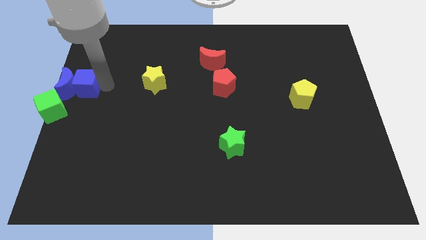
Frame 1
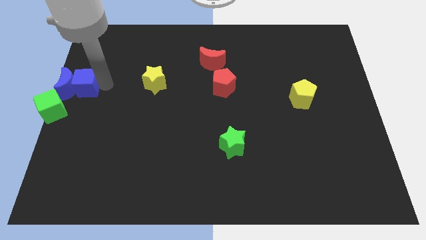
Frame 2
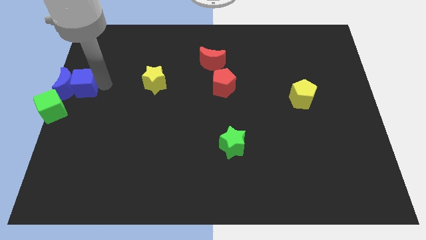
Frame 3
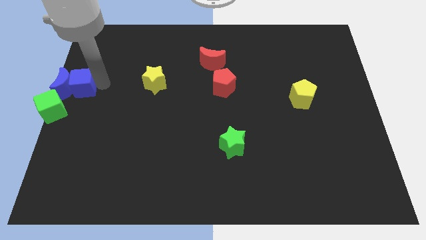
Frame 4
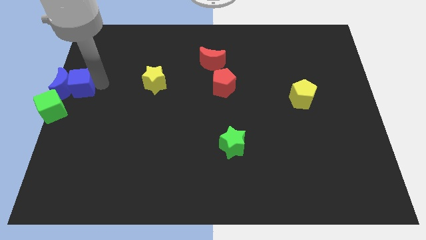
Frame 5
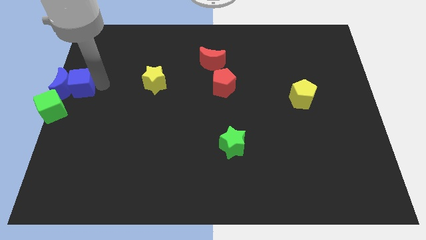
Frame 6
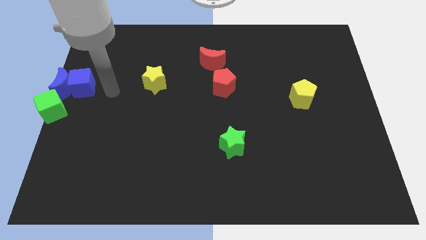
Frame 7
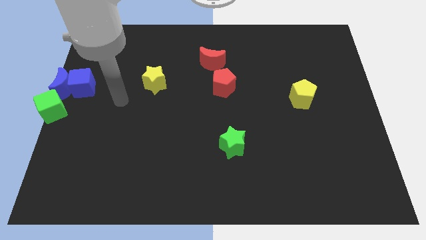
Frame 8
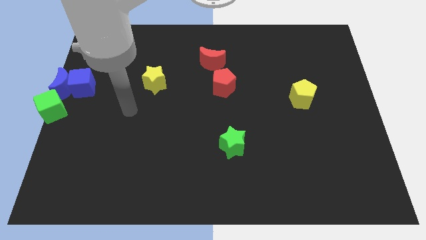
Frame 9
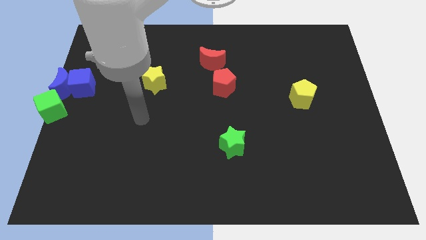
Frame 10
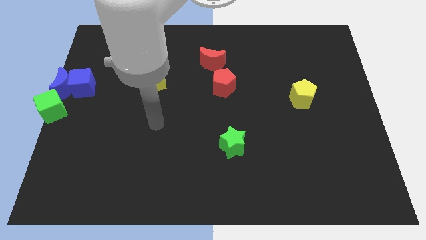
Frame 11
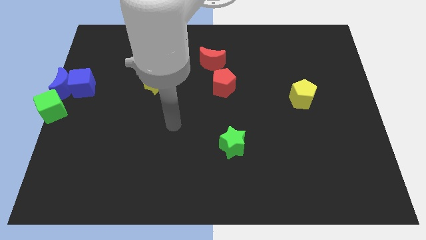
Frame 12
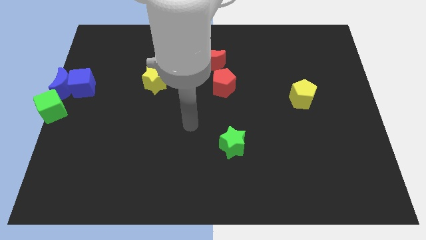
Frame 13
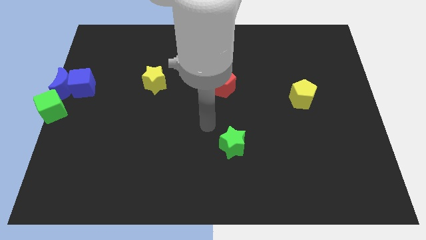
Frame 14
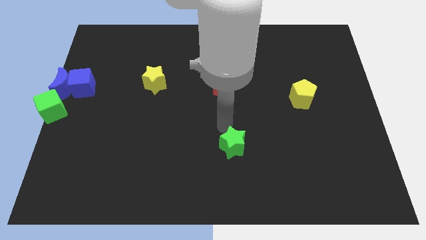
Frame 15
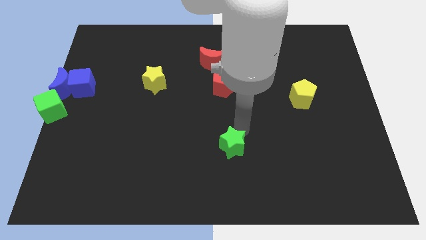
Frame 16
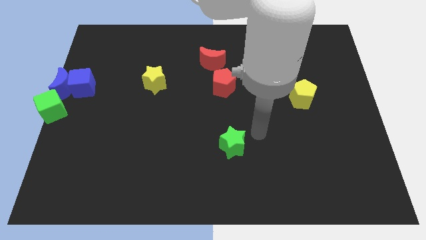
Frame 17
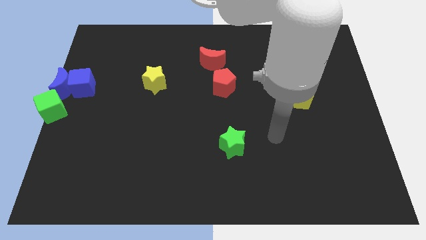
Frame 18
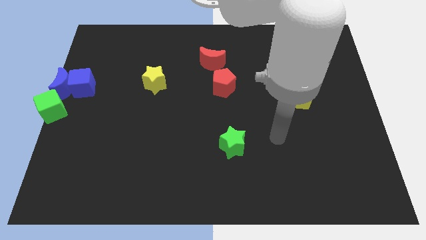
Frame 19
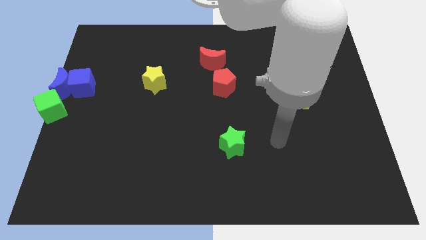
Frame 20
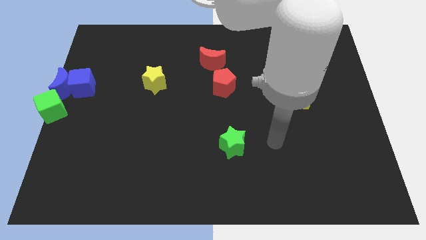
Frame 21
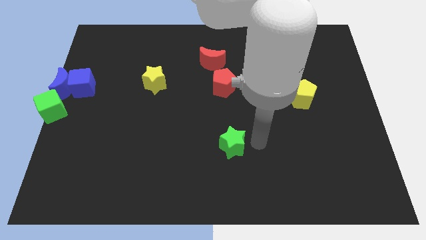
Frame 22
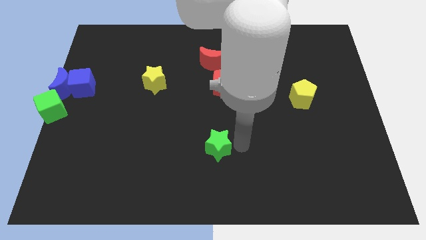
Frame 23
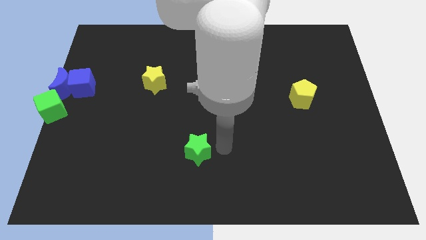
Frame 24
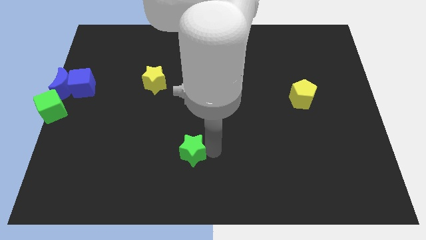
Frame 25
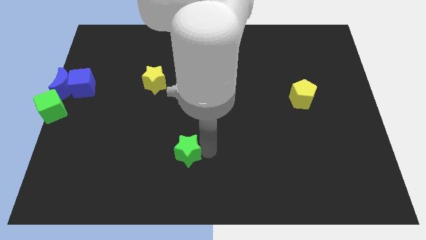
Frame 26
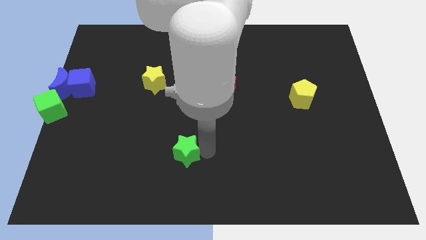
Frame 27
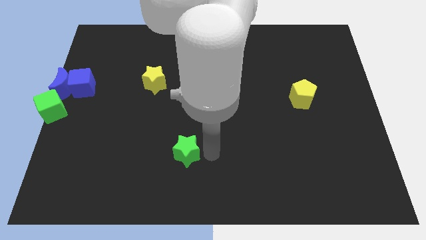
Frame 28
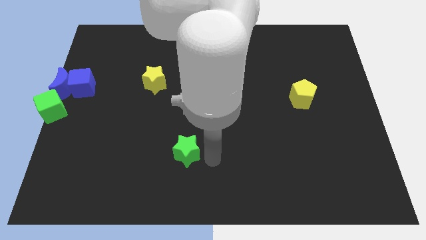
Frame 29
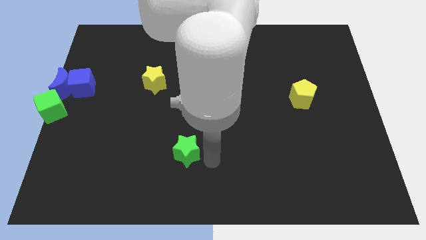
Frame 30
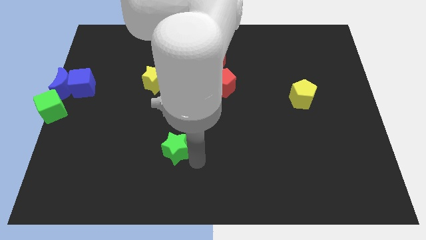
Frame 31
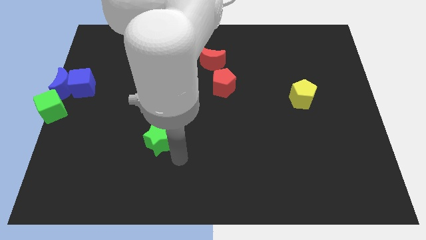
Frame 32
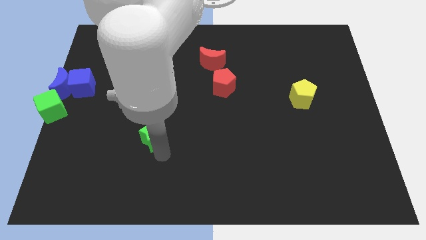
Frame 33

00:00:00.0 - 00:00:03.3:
put the green star diagonally bottom right to green cube

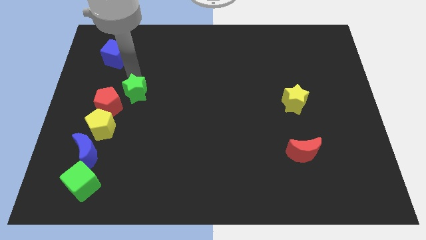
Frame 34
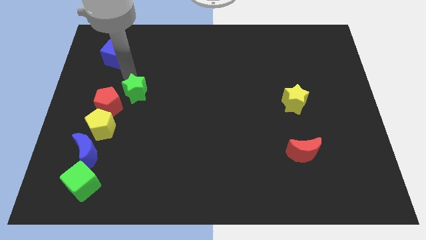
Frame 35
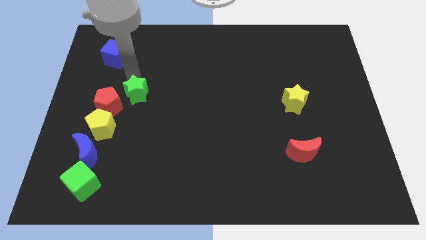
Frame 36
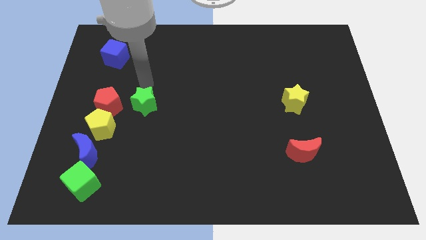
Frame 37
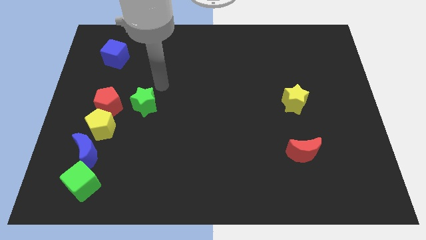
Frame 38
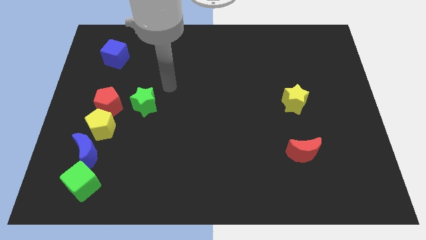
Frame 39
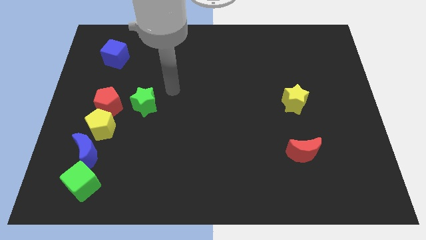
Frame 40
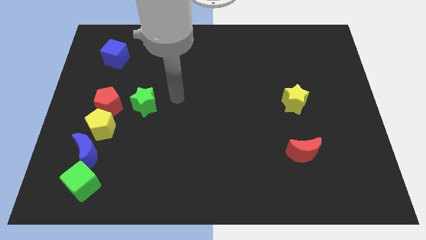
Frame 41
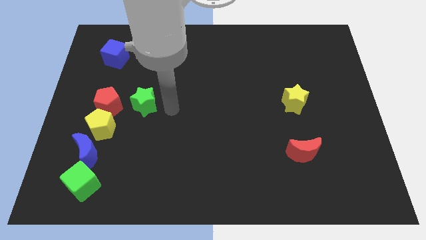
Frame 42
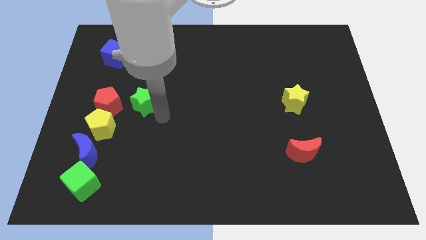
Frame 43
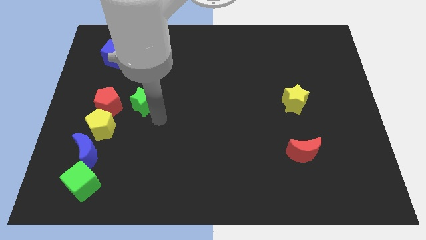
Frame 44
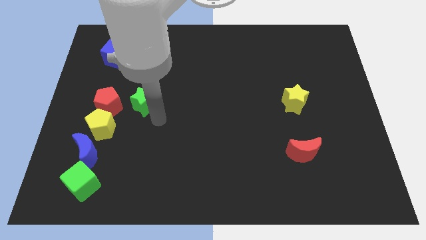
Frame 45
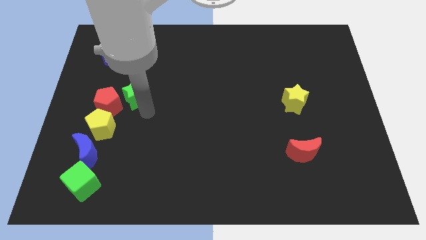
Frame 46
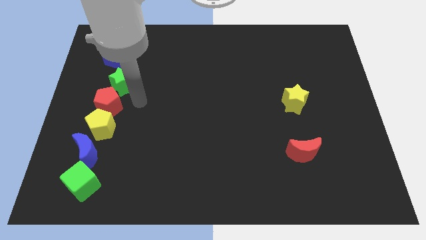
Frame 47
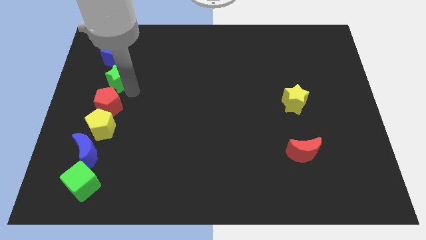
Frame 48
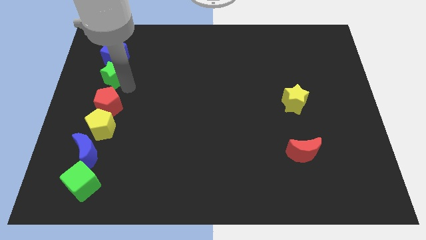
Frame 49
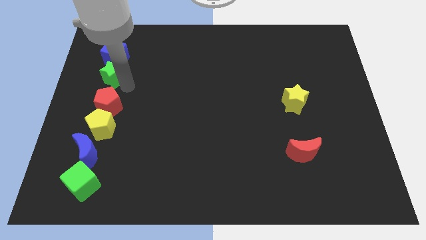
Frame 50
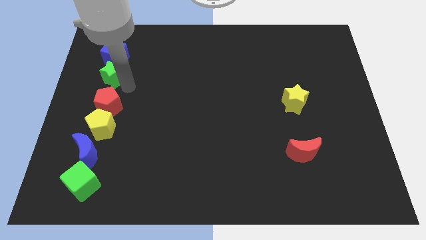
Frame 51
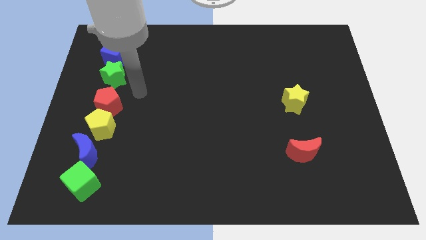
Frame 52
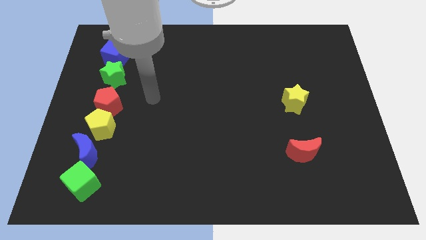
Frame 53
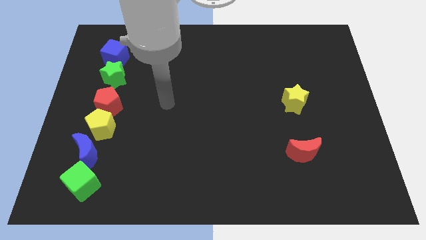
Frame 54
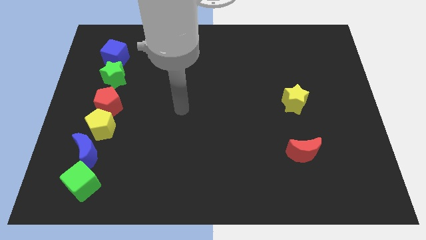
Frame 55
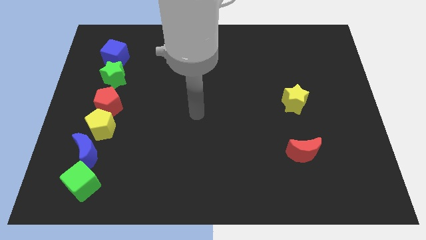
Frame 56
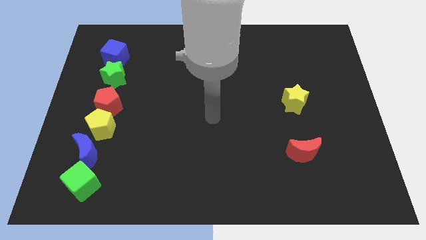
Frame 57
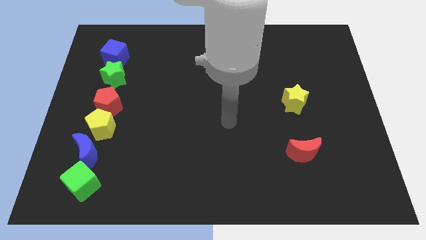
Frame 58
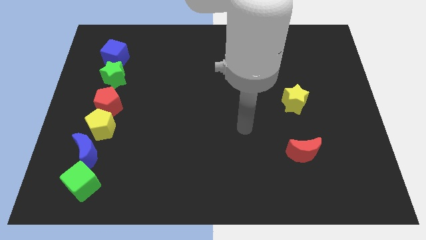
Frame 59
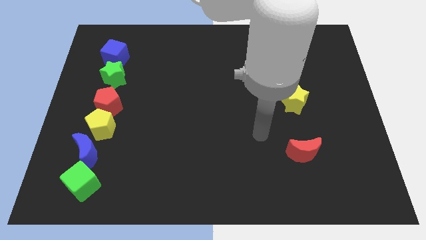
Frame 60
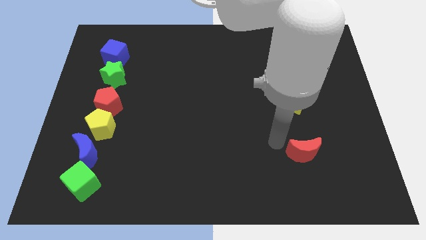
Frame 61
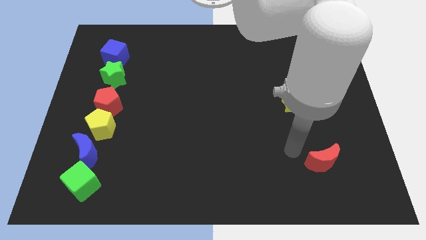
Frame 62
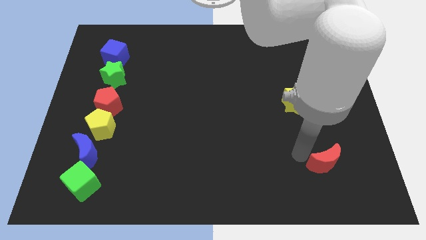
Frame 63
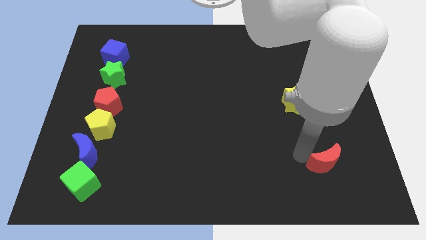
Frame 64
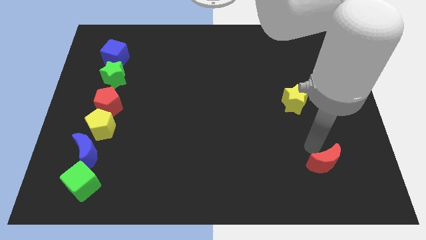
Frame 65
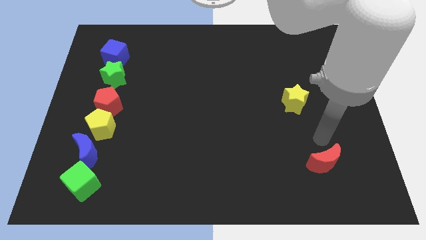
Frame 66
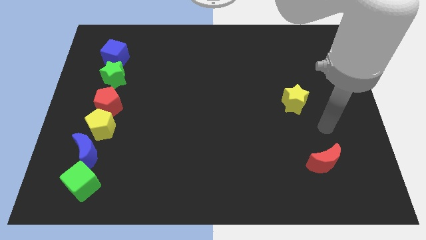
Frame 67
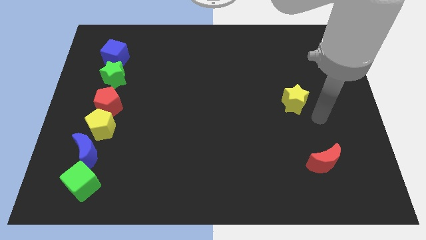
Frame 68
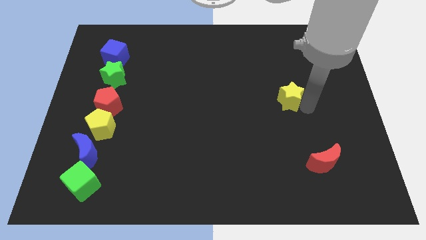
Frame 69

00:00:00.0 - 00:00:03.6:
move the green star between red pentagon and blue cube

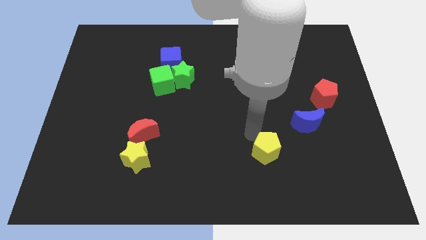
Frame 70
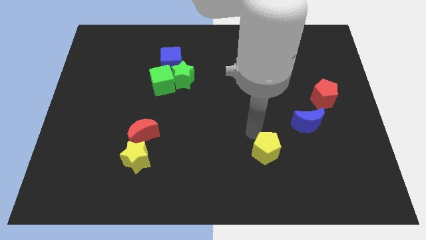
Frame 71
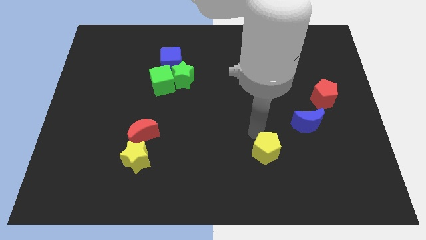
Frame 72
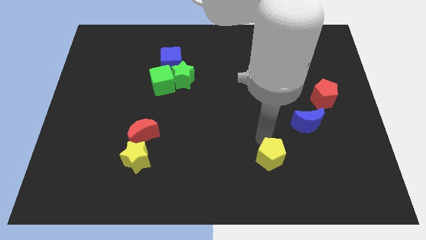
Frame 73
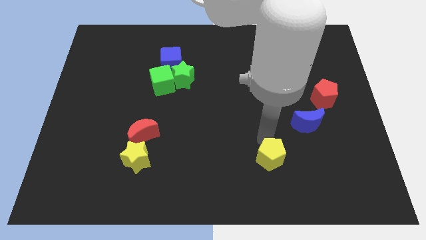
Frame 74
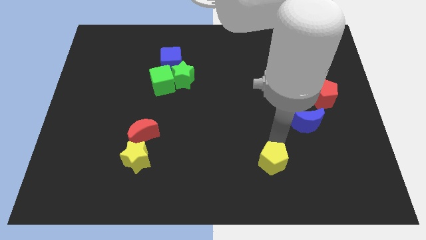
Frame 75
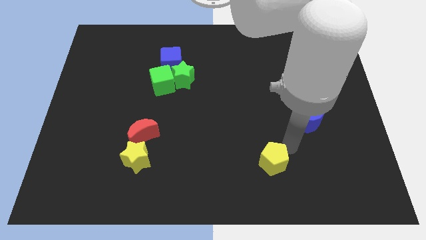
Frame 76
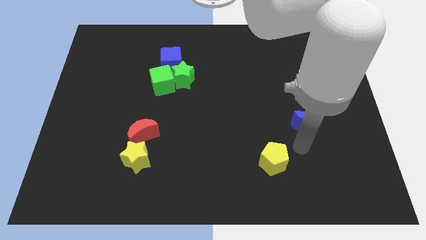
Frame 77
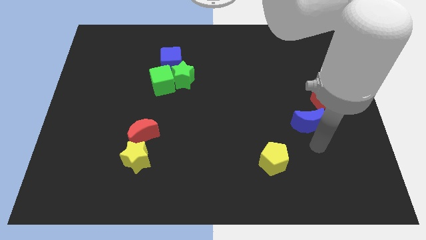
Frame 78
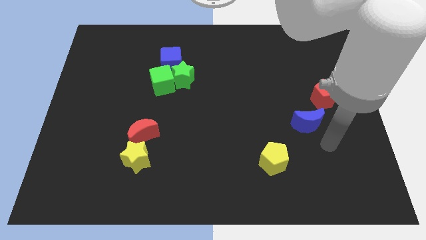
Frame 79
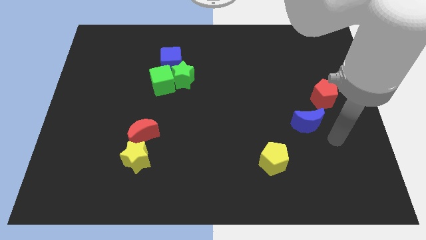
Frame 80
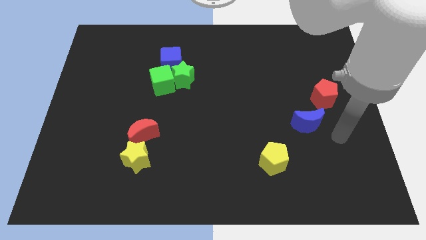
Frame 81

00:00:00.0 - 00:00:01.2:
slide the yellow pentagon slightly downwards on the board

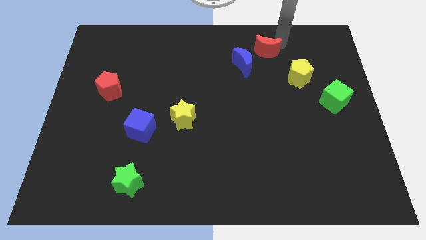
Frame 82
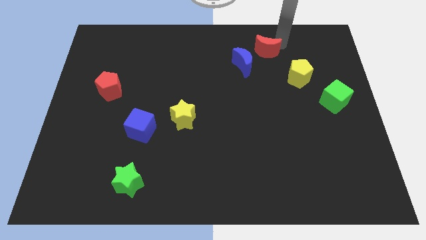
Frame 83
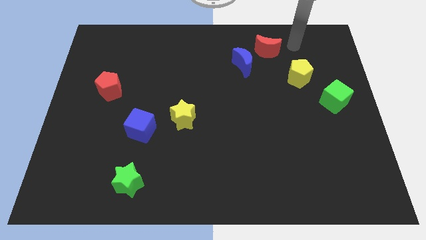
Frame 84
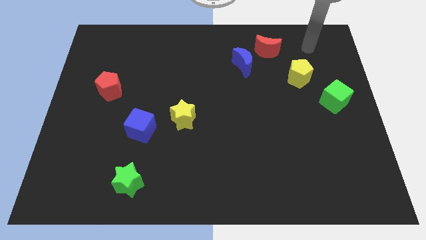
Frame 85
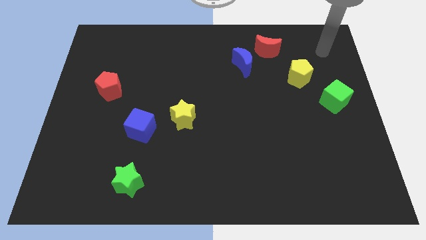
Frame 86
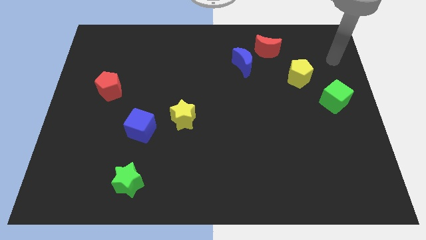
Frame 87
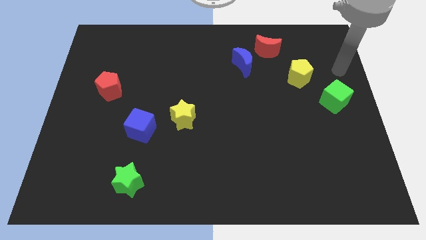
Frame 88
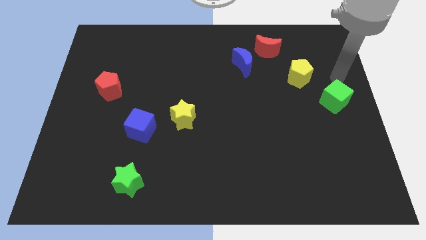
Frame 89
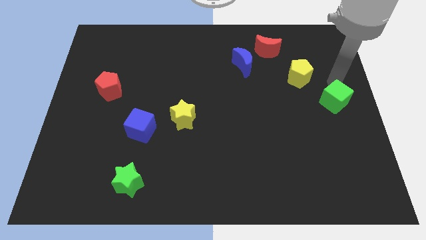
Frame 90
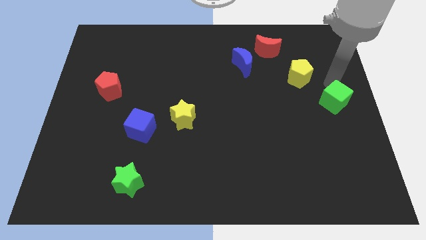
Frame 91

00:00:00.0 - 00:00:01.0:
move your arm to the top of the green cube
